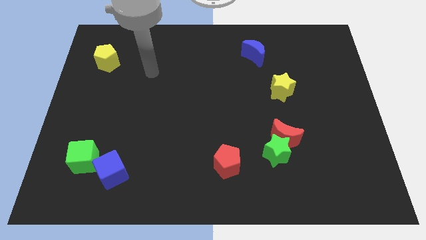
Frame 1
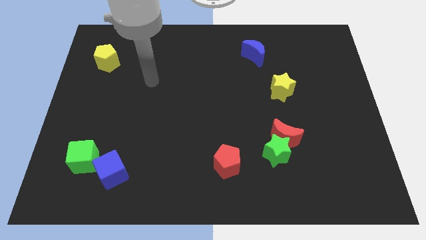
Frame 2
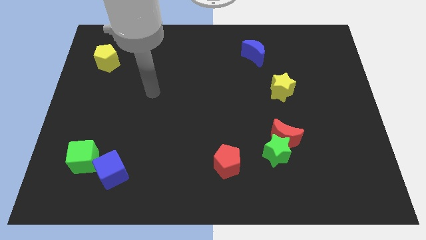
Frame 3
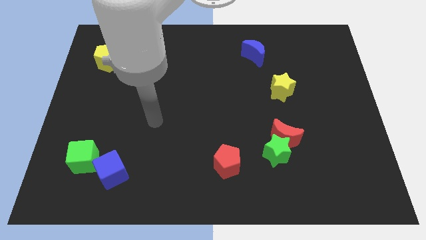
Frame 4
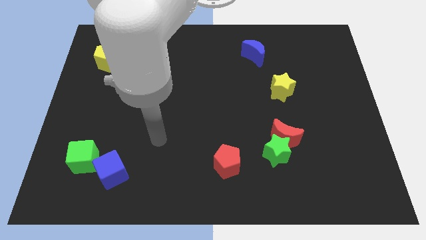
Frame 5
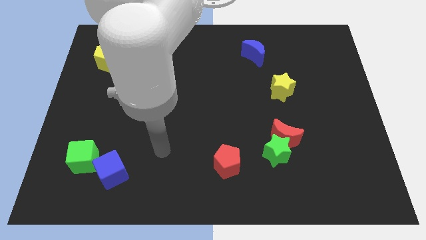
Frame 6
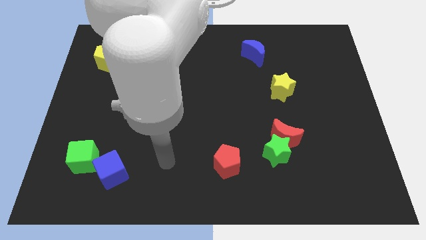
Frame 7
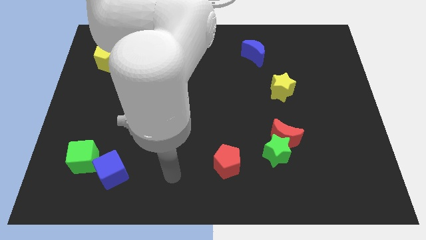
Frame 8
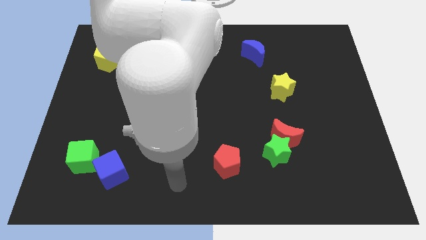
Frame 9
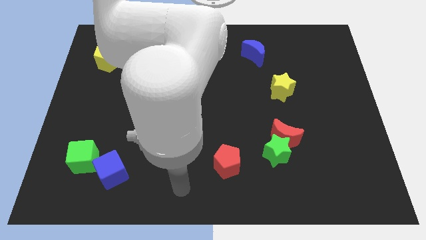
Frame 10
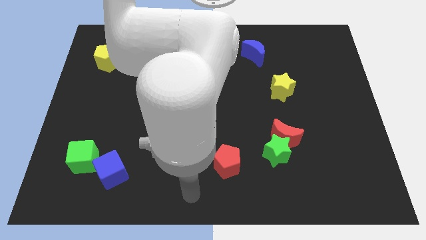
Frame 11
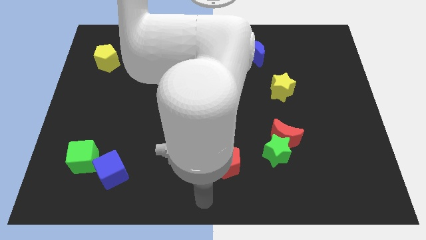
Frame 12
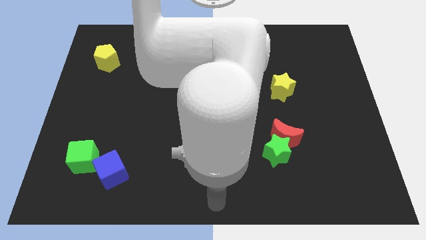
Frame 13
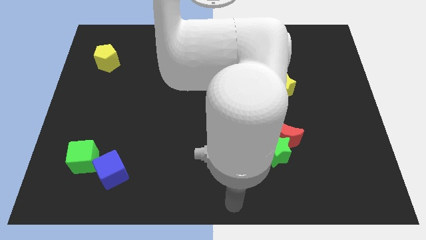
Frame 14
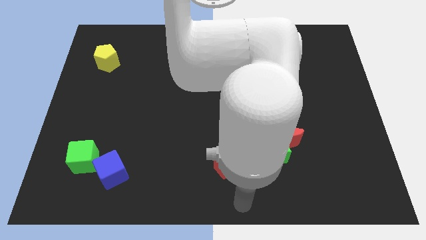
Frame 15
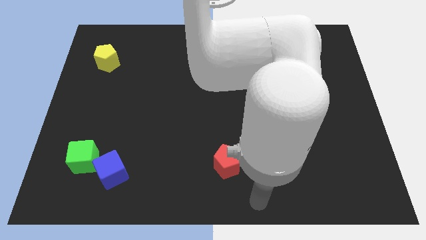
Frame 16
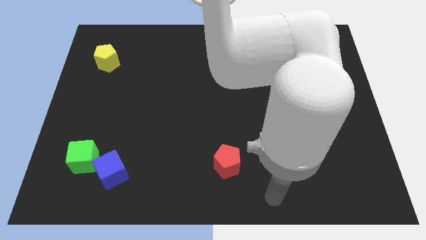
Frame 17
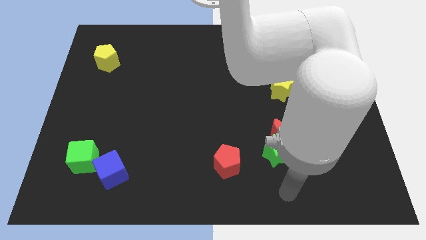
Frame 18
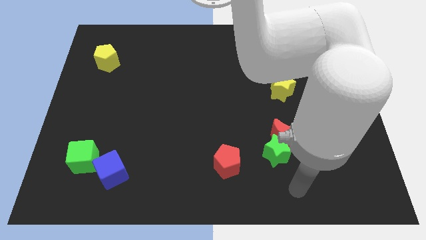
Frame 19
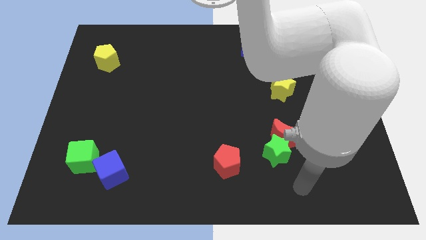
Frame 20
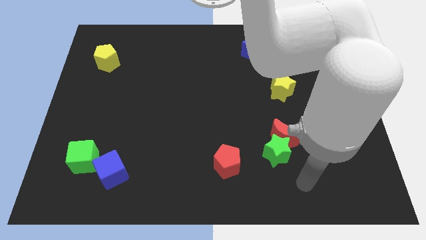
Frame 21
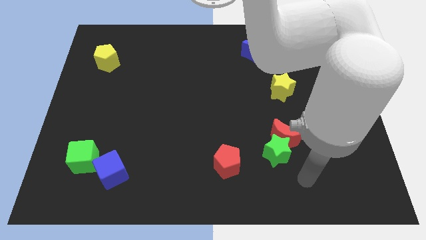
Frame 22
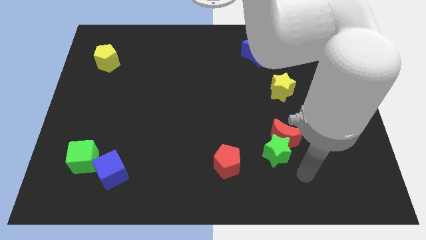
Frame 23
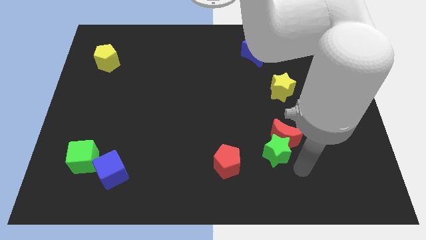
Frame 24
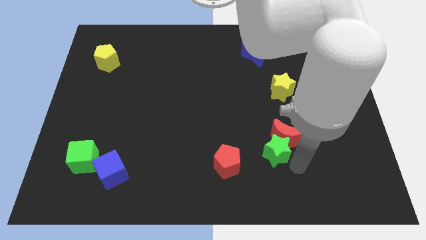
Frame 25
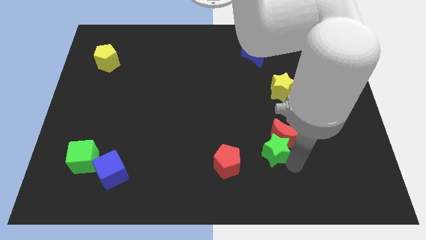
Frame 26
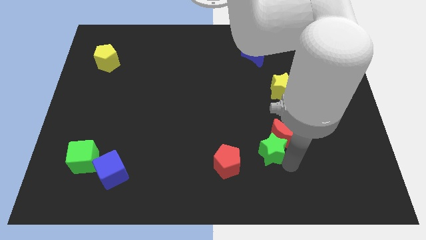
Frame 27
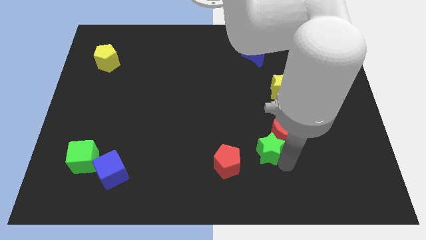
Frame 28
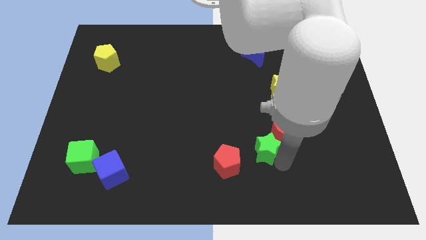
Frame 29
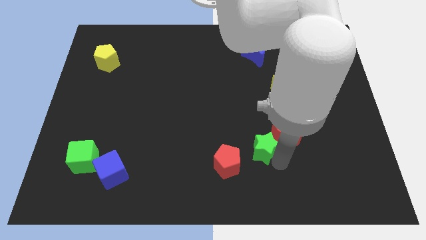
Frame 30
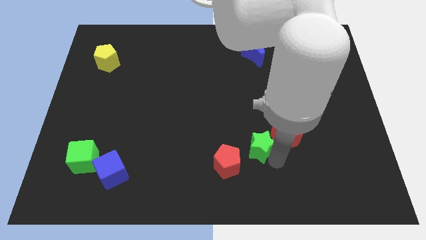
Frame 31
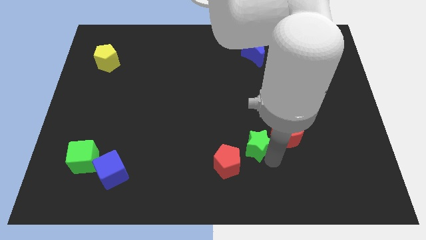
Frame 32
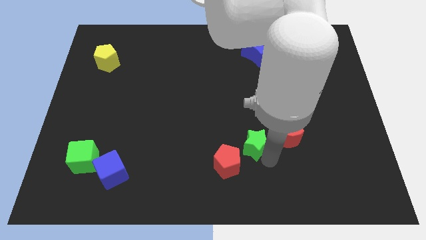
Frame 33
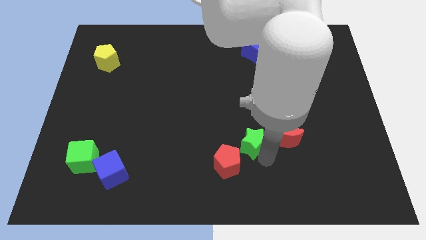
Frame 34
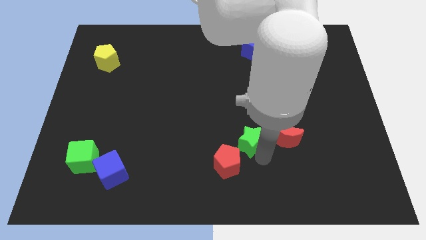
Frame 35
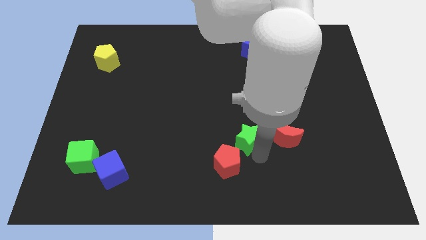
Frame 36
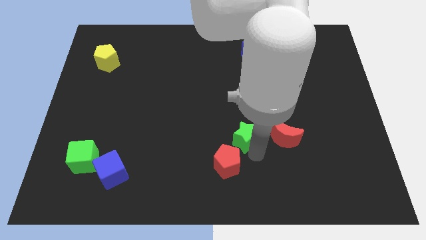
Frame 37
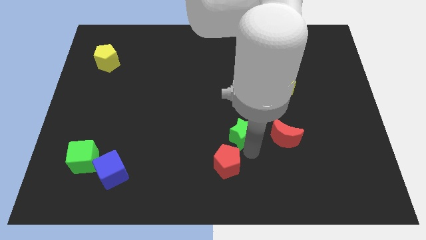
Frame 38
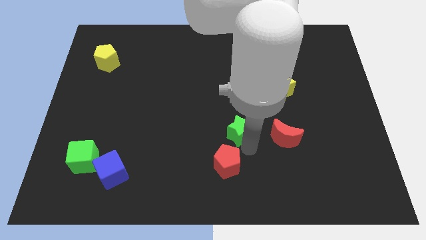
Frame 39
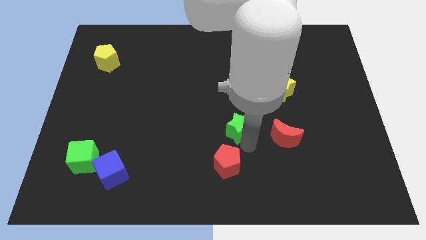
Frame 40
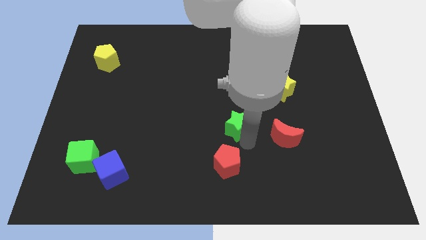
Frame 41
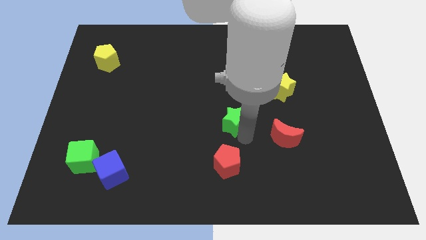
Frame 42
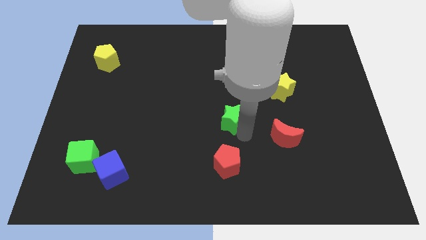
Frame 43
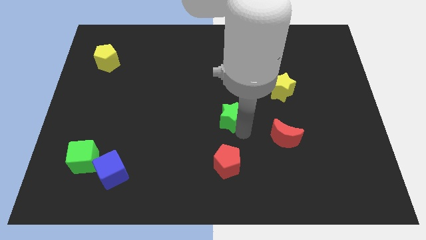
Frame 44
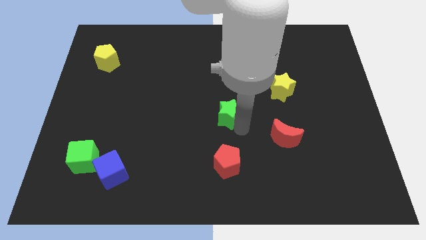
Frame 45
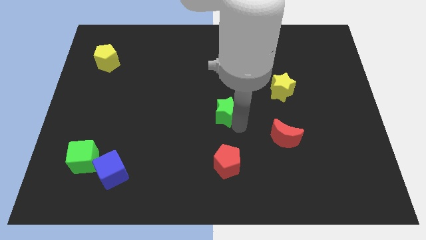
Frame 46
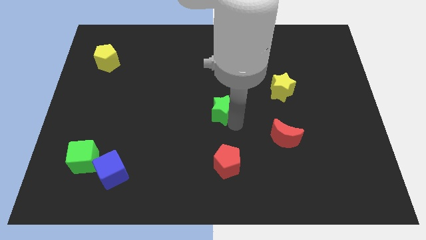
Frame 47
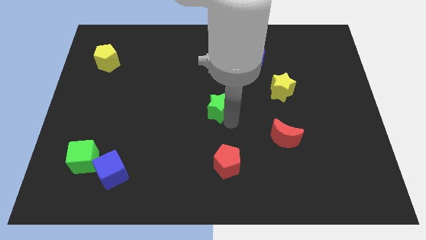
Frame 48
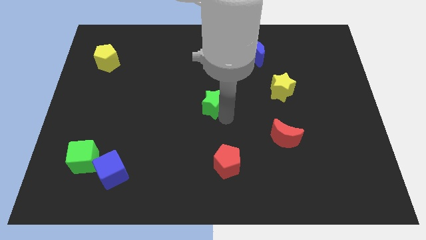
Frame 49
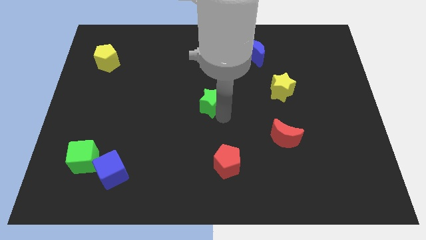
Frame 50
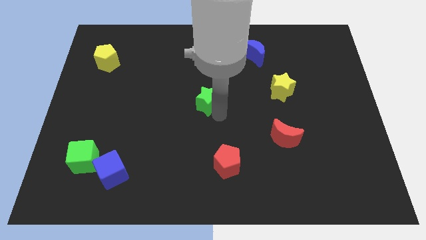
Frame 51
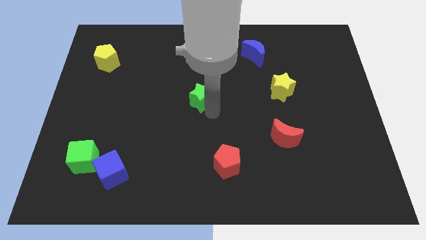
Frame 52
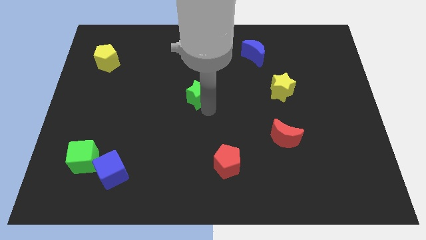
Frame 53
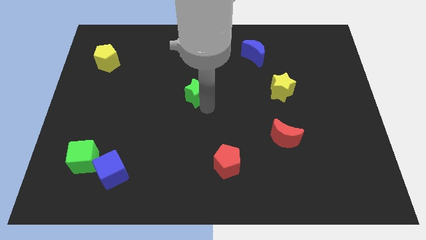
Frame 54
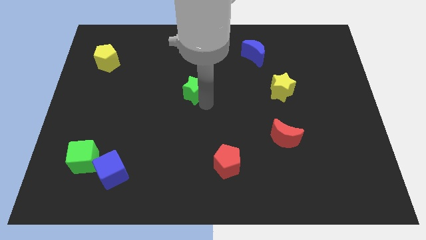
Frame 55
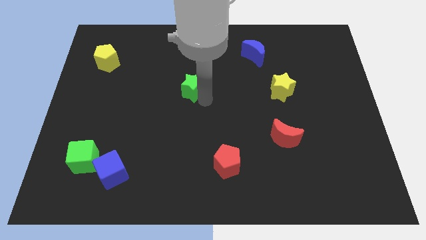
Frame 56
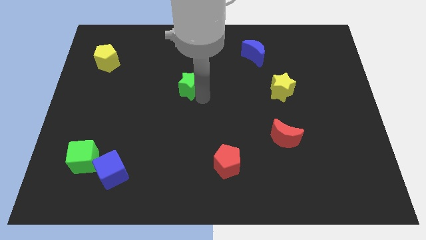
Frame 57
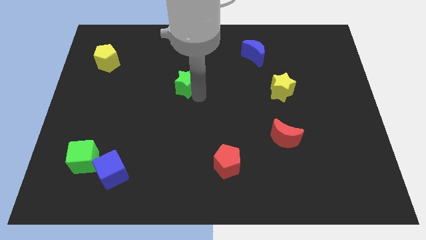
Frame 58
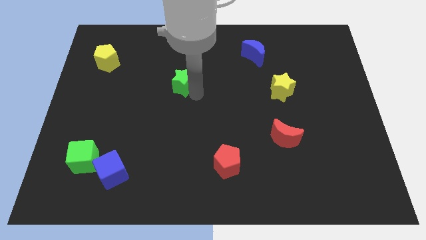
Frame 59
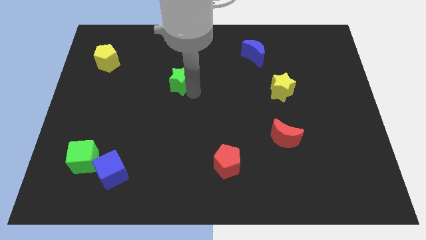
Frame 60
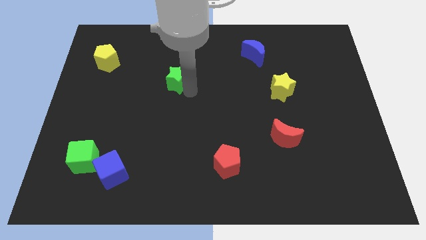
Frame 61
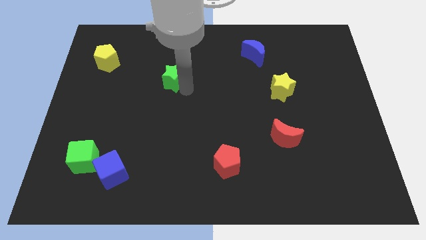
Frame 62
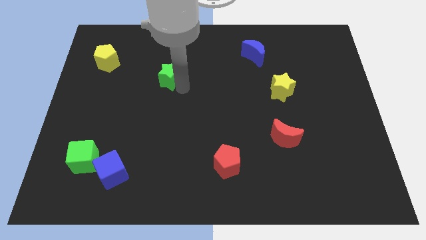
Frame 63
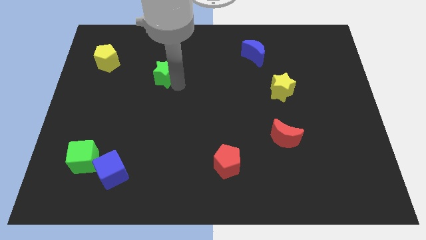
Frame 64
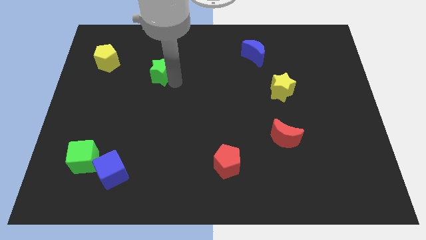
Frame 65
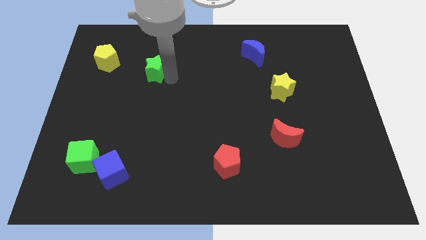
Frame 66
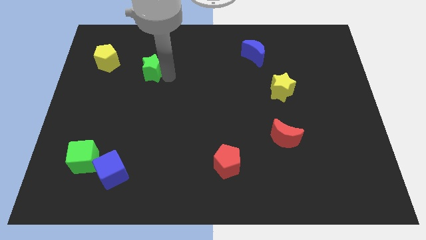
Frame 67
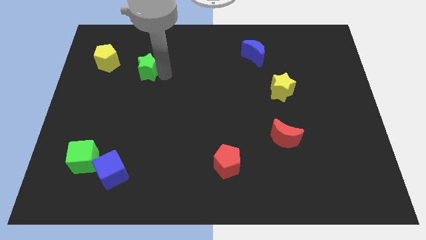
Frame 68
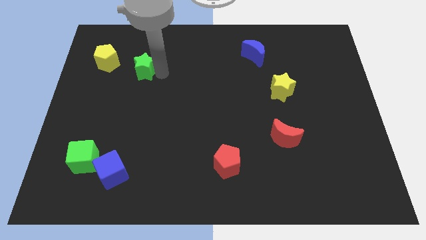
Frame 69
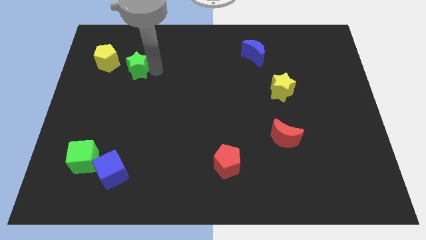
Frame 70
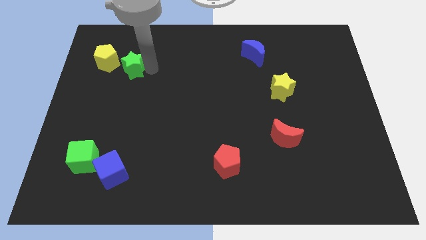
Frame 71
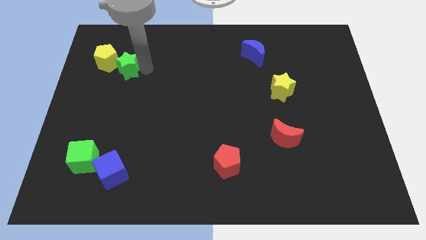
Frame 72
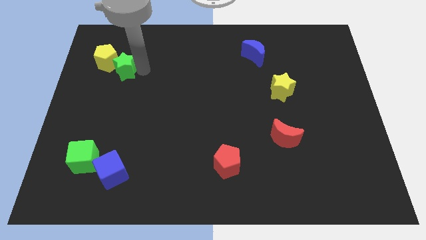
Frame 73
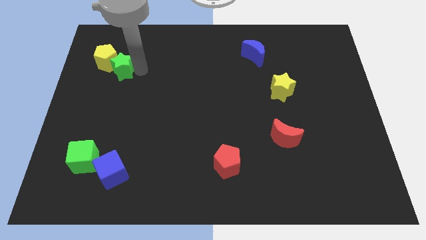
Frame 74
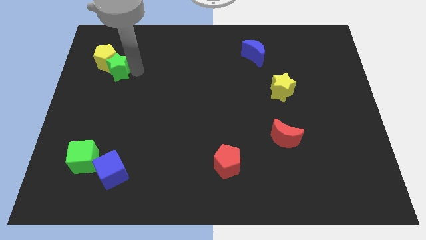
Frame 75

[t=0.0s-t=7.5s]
push the green star close to the yellow pentagon

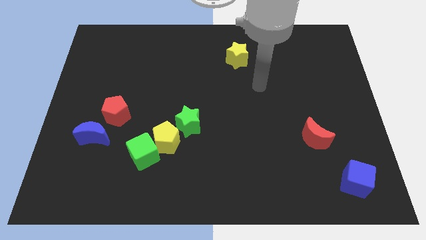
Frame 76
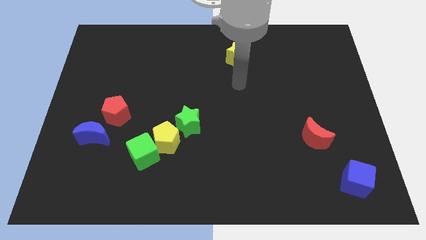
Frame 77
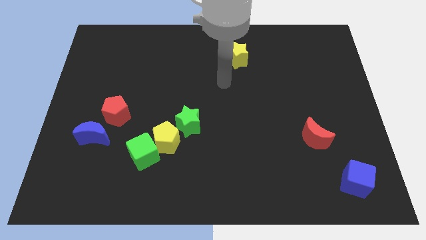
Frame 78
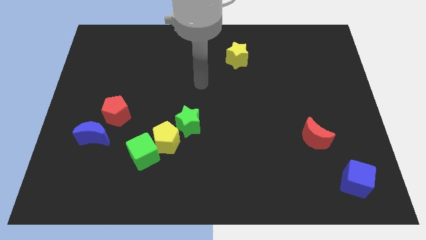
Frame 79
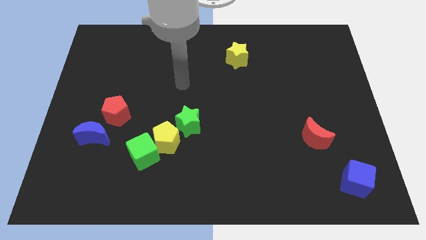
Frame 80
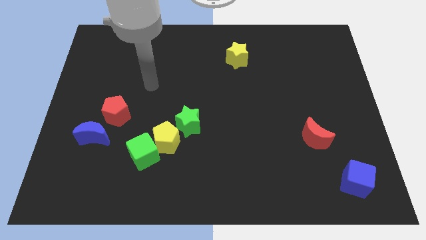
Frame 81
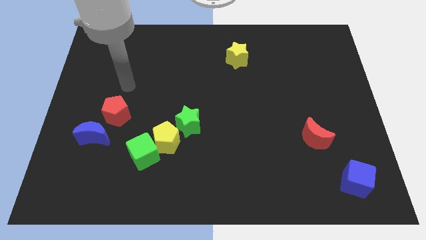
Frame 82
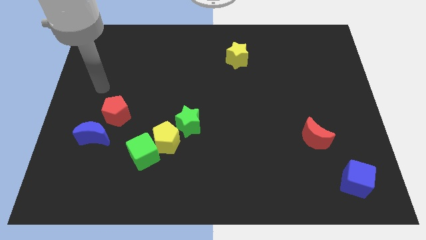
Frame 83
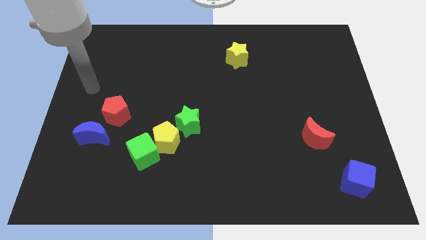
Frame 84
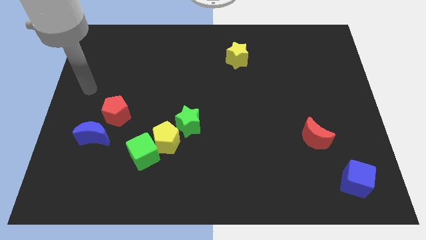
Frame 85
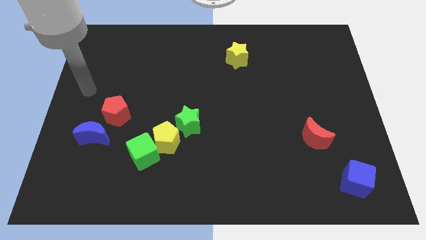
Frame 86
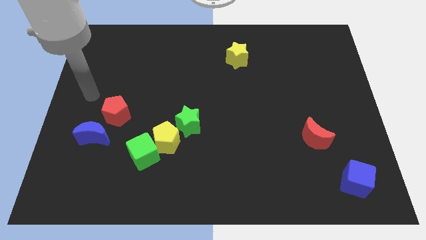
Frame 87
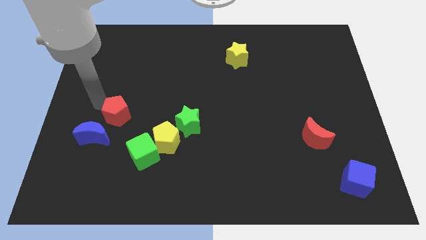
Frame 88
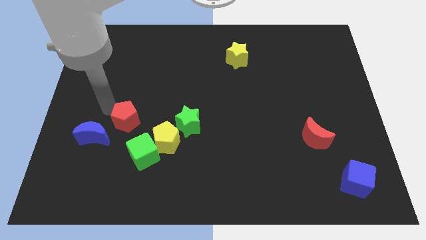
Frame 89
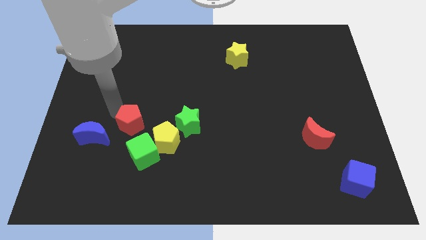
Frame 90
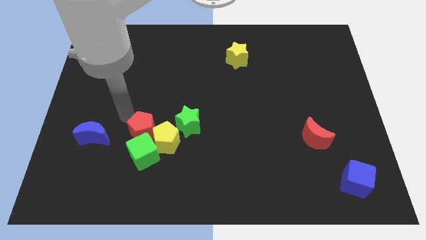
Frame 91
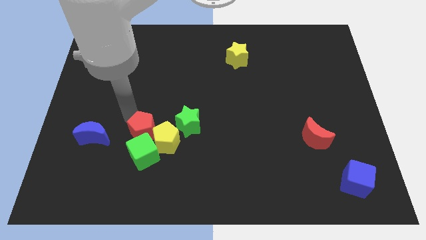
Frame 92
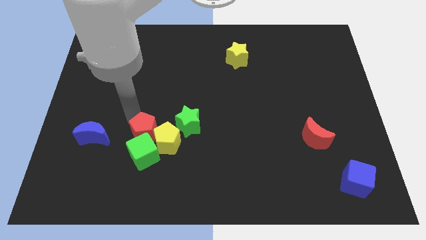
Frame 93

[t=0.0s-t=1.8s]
push the red pentagon next to the yellow pentagon
